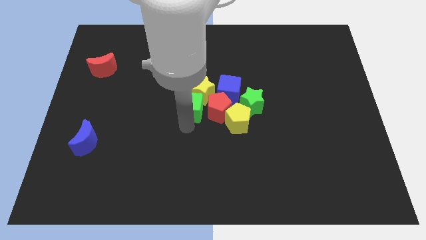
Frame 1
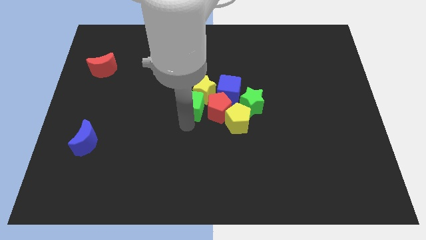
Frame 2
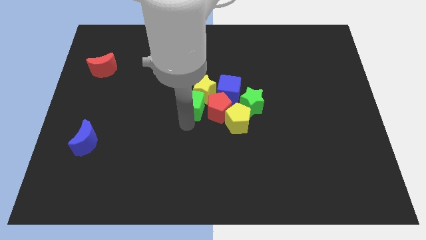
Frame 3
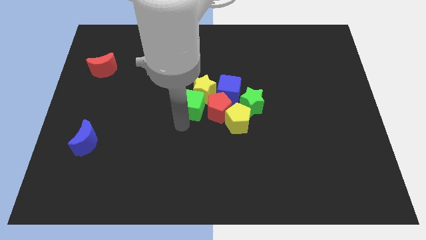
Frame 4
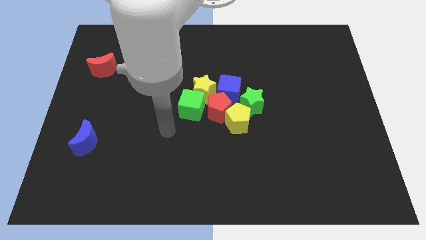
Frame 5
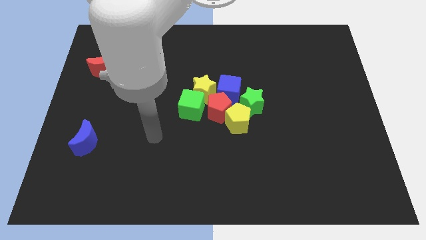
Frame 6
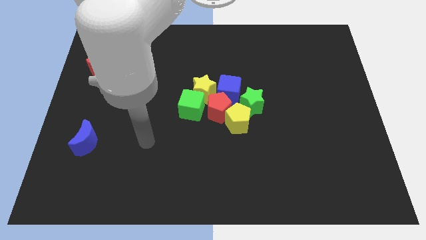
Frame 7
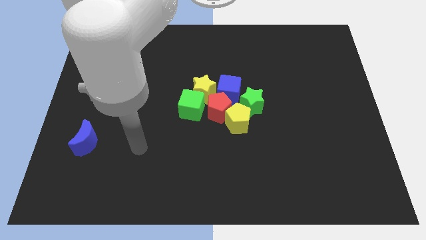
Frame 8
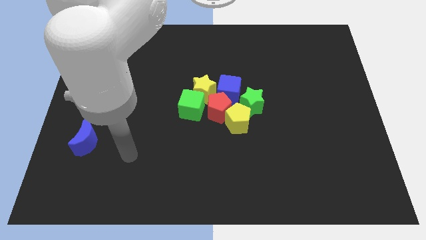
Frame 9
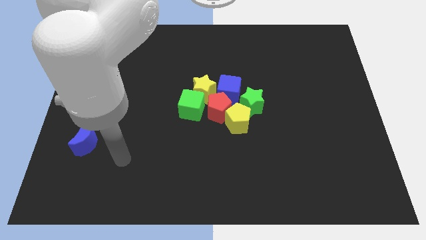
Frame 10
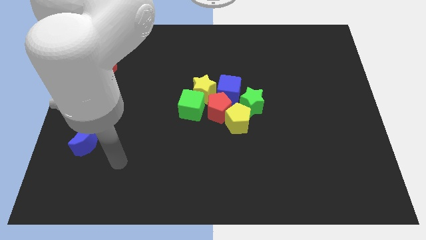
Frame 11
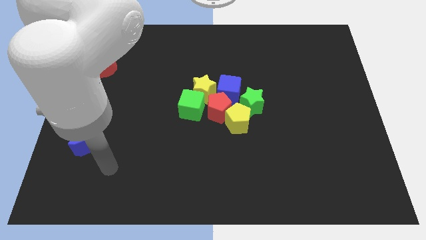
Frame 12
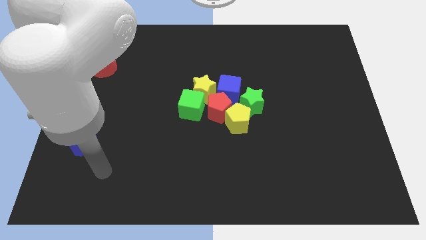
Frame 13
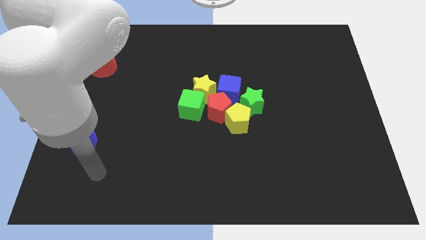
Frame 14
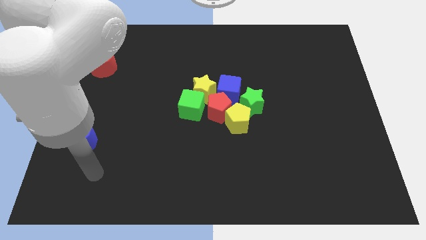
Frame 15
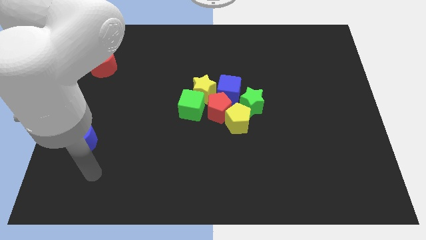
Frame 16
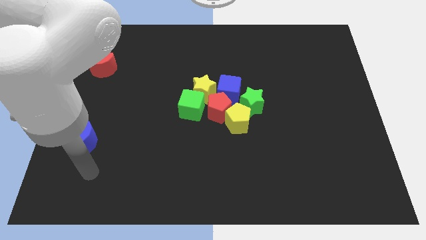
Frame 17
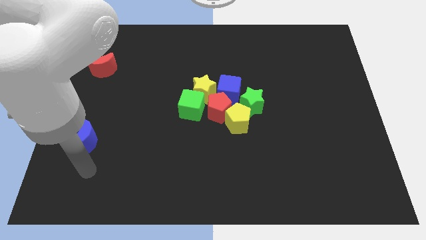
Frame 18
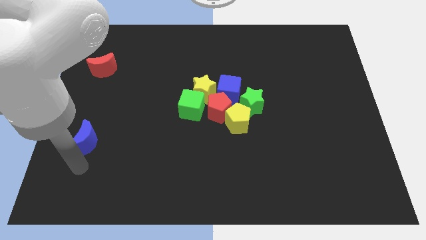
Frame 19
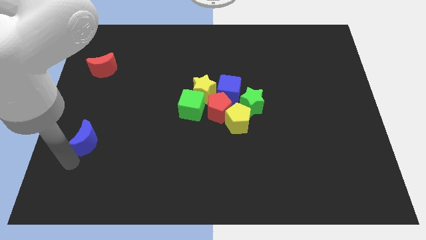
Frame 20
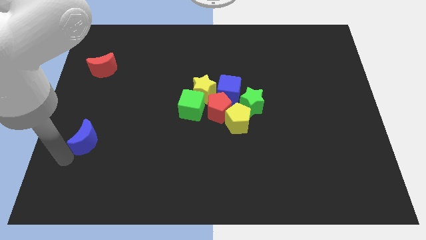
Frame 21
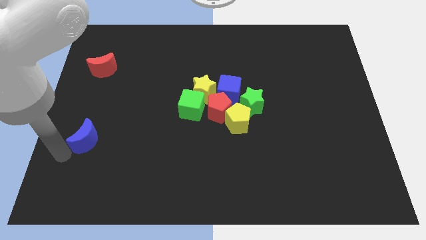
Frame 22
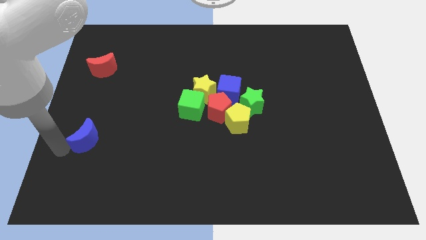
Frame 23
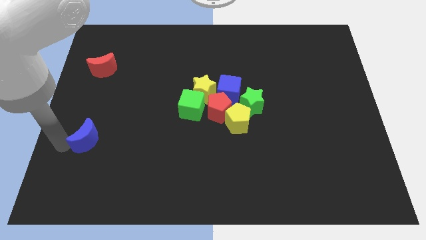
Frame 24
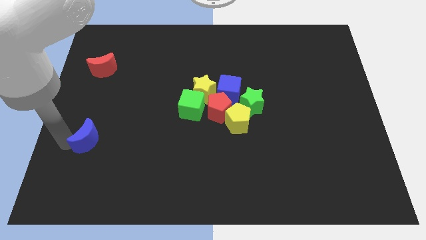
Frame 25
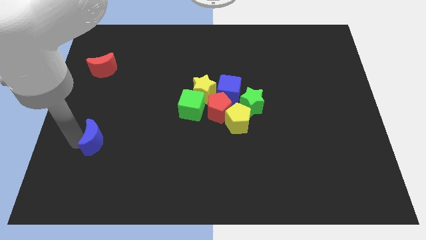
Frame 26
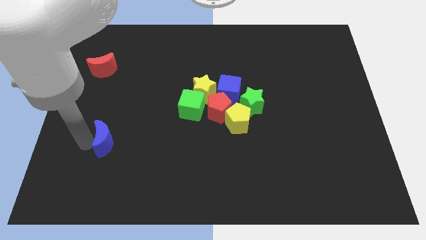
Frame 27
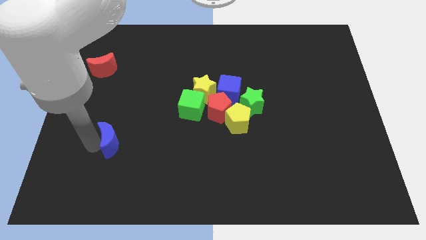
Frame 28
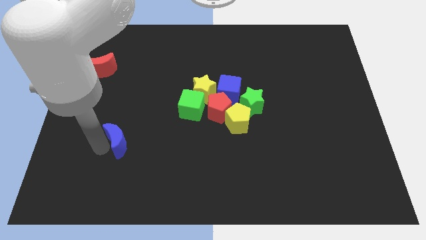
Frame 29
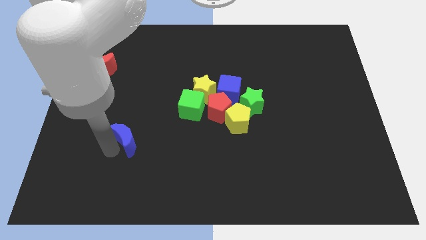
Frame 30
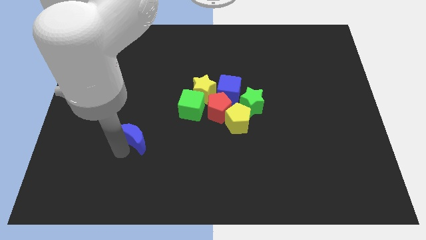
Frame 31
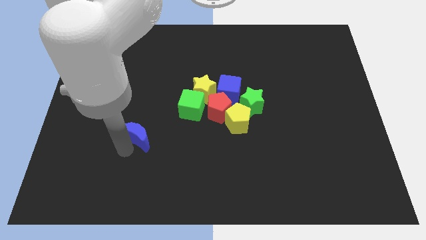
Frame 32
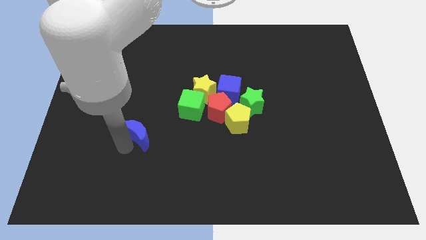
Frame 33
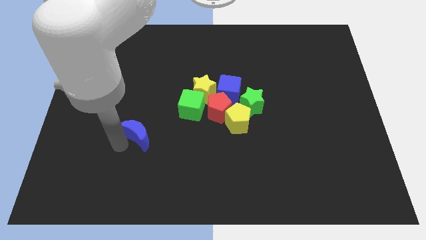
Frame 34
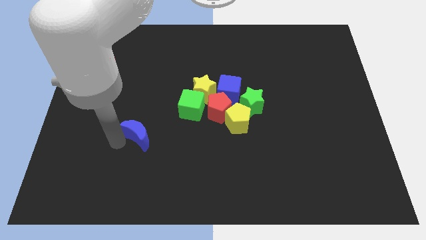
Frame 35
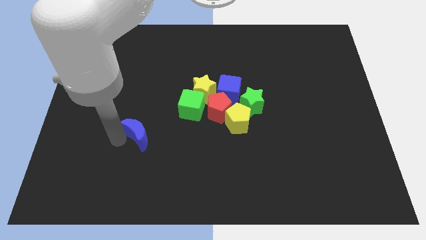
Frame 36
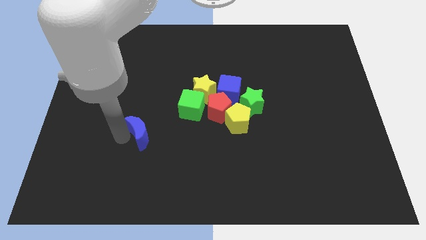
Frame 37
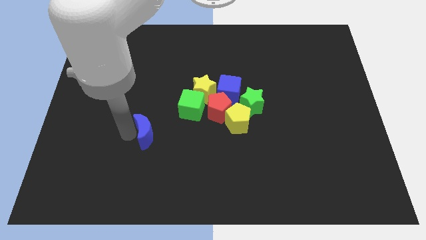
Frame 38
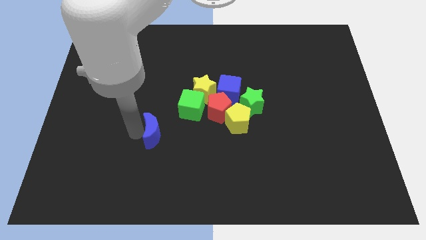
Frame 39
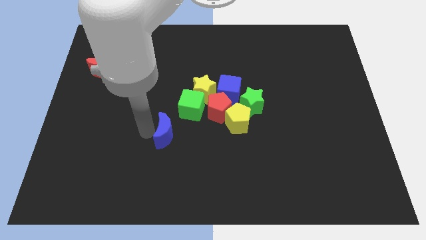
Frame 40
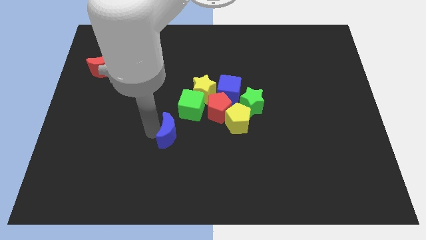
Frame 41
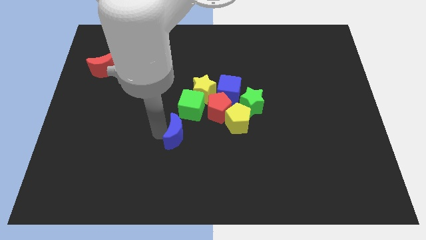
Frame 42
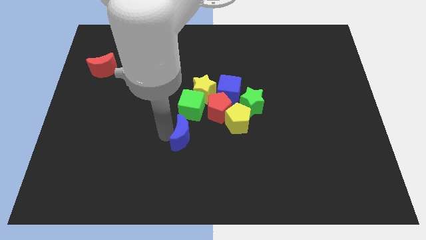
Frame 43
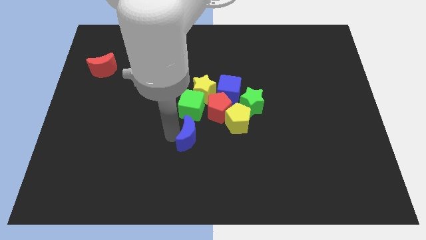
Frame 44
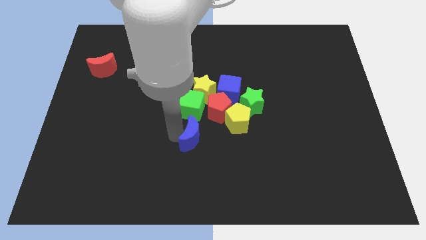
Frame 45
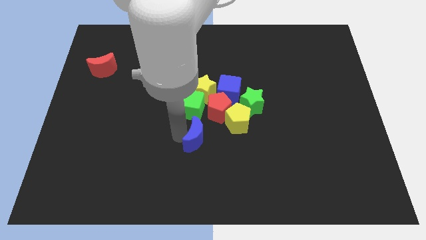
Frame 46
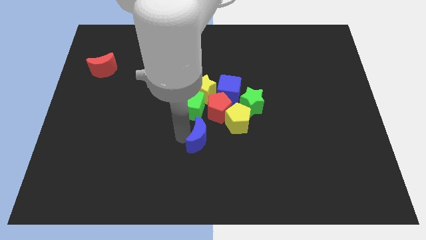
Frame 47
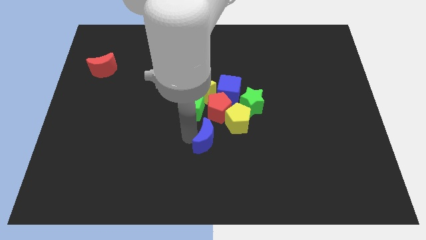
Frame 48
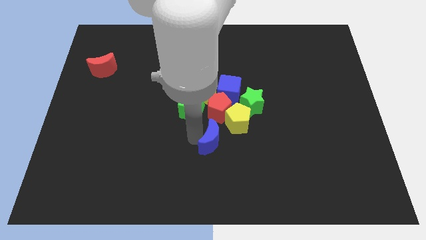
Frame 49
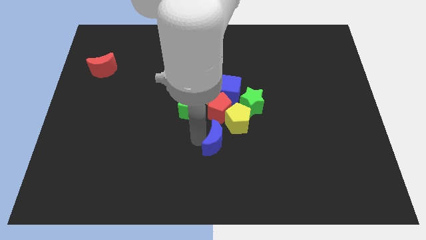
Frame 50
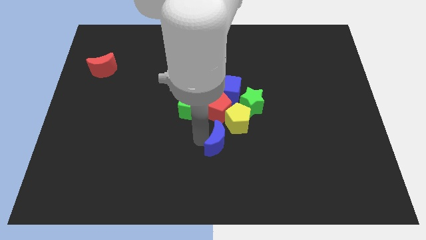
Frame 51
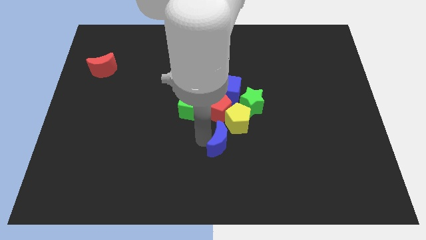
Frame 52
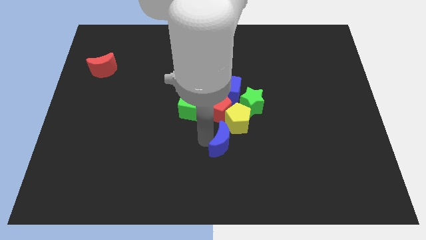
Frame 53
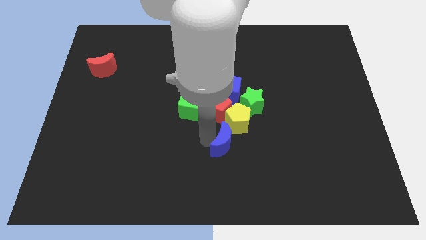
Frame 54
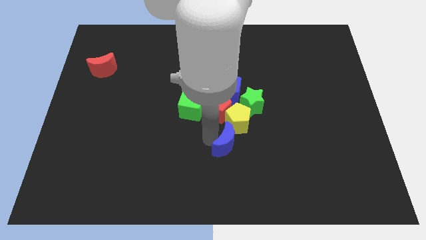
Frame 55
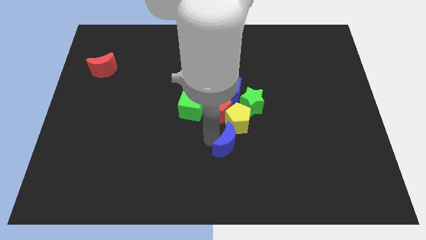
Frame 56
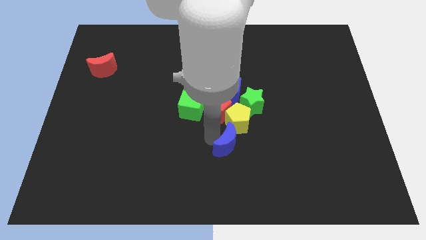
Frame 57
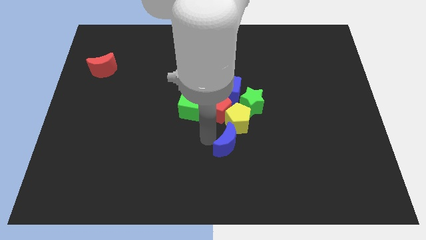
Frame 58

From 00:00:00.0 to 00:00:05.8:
move blue moon close to yellow pentagon

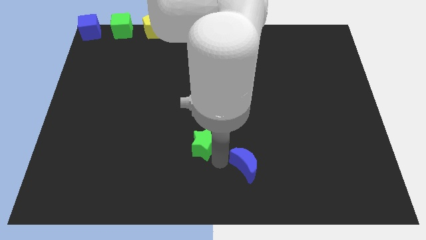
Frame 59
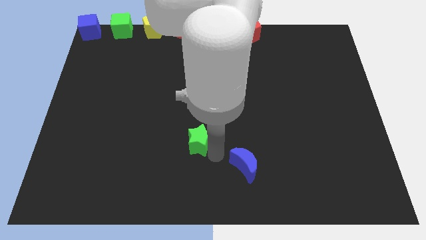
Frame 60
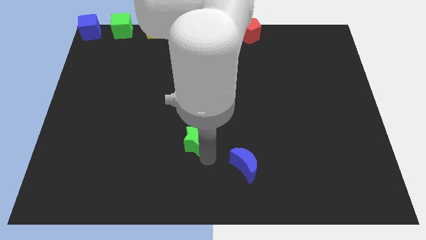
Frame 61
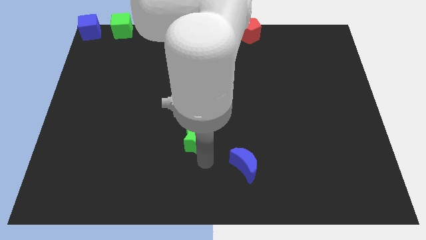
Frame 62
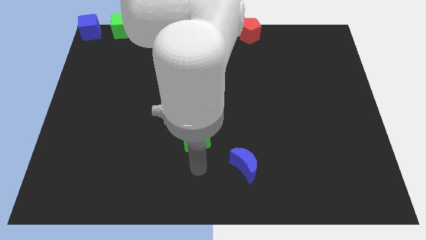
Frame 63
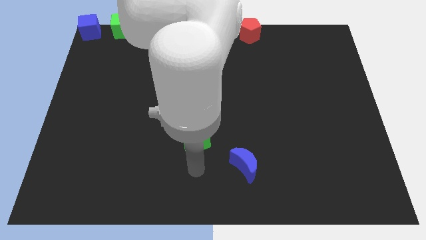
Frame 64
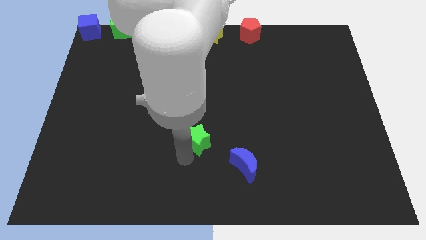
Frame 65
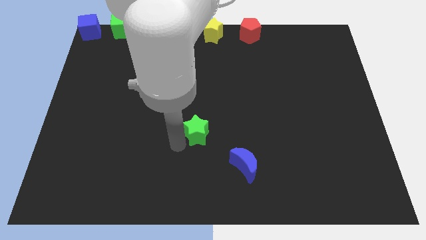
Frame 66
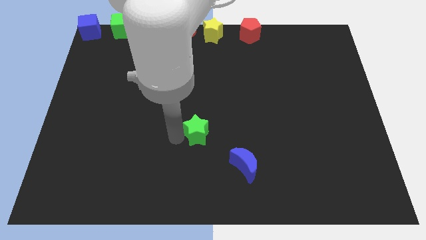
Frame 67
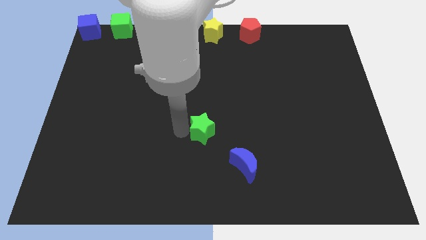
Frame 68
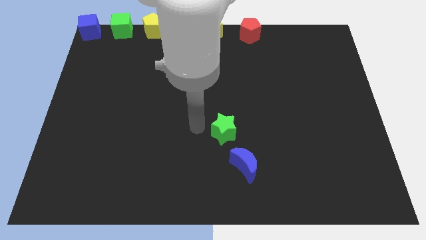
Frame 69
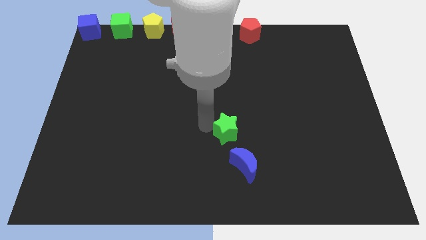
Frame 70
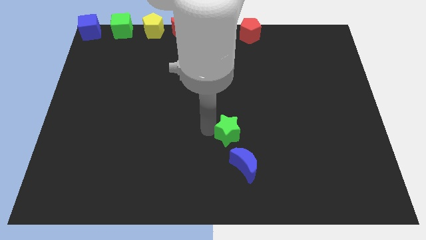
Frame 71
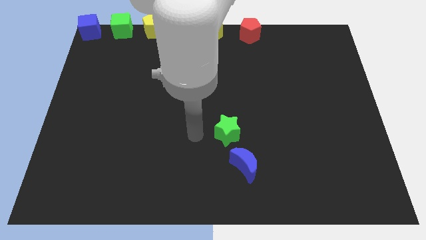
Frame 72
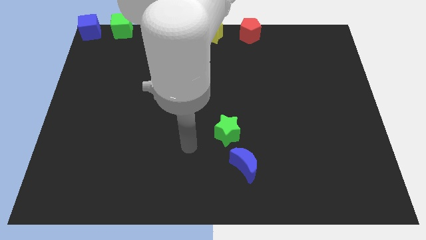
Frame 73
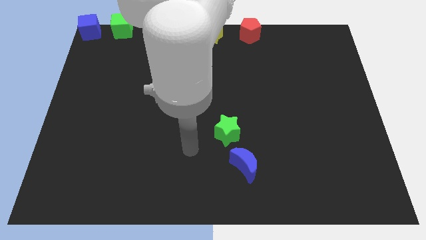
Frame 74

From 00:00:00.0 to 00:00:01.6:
place the green star above the blue crescent

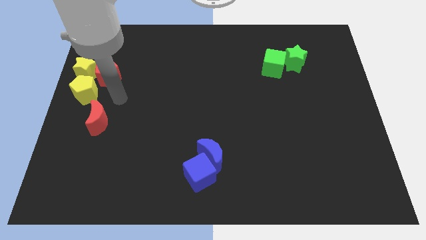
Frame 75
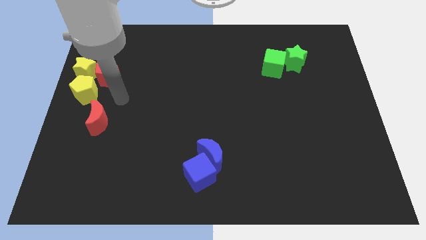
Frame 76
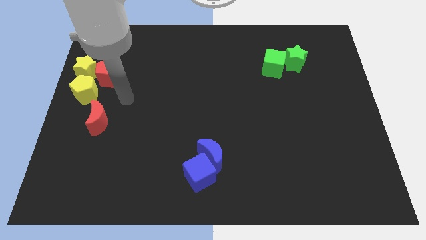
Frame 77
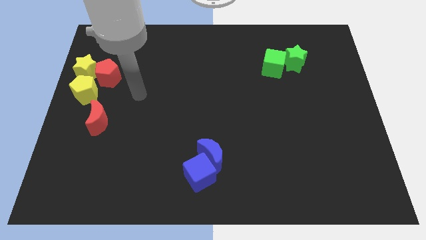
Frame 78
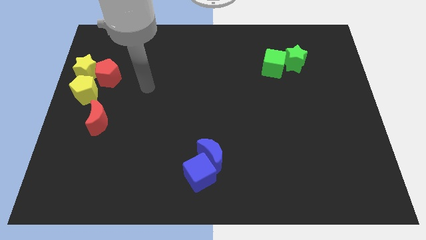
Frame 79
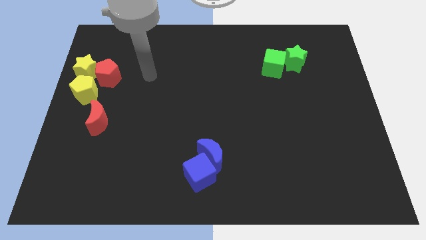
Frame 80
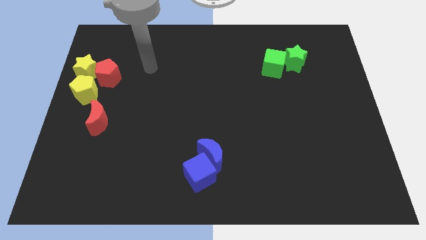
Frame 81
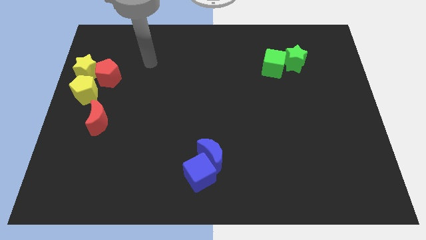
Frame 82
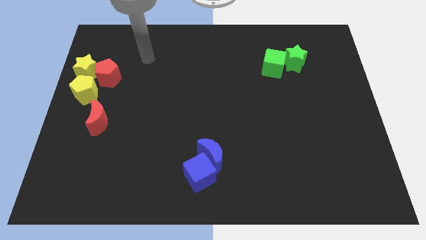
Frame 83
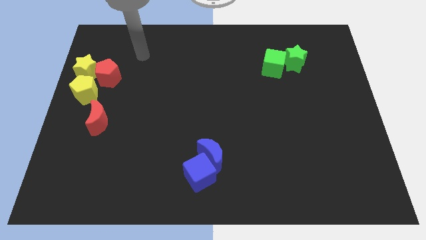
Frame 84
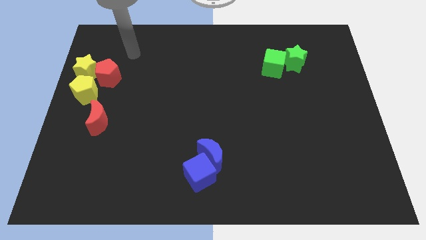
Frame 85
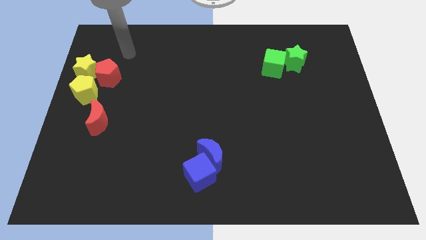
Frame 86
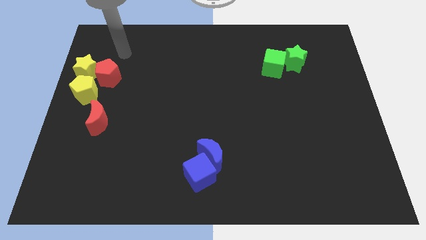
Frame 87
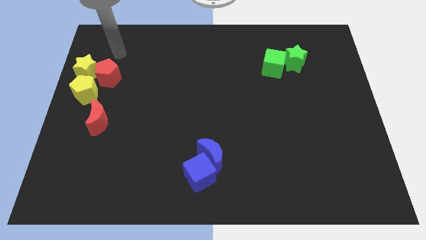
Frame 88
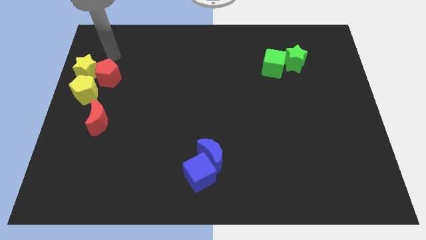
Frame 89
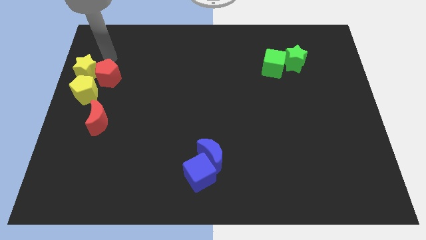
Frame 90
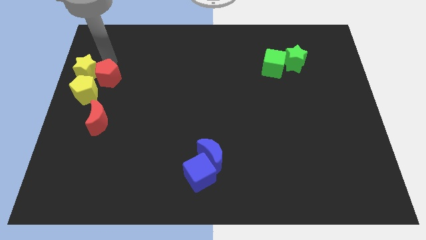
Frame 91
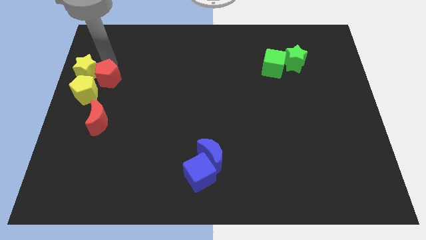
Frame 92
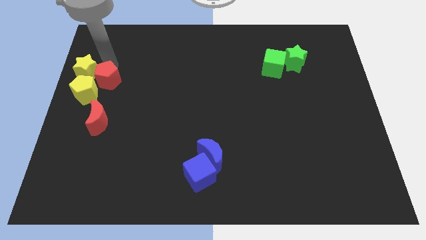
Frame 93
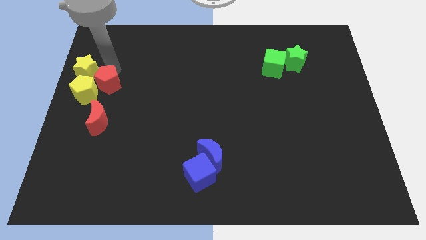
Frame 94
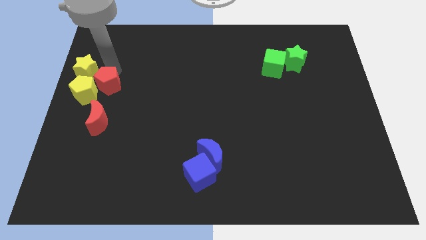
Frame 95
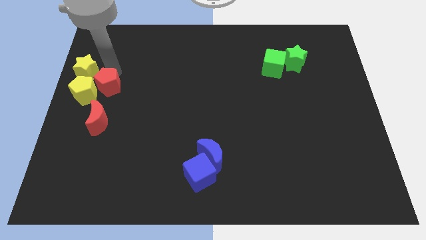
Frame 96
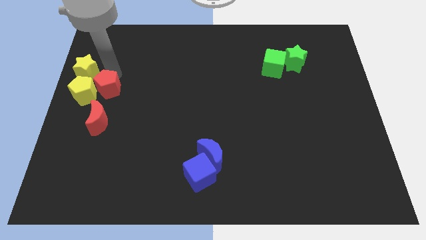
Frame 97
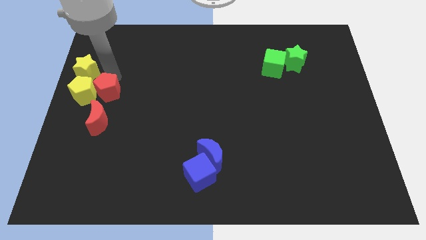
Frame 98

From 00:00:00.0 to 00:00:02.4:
place the red pentagon to the right side of the yellow pentagon
